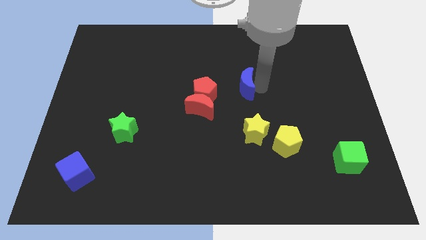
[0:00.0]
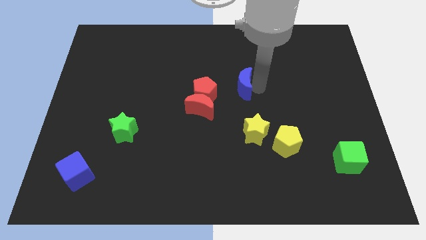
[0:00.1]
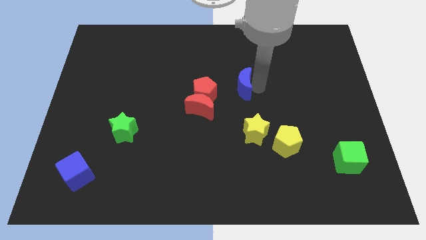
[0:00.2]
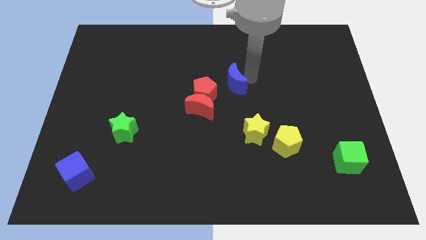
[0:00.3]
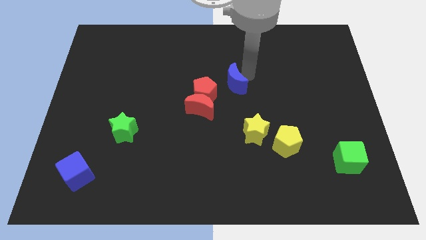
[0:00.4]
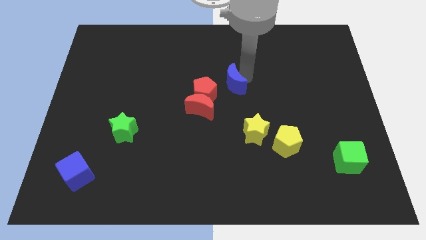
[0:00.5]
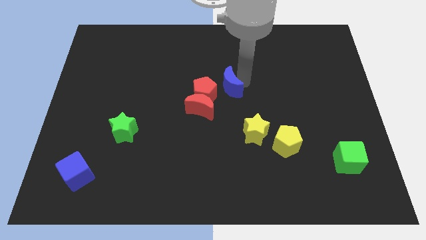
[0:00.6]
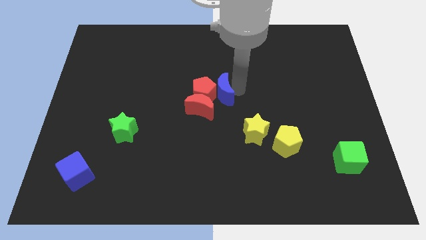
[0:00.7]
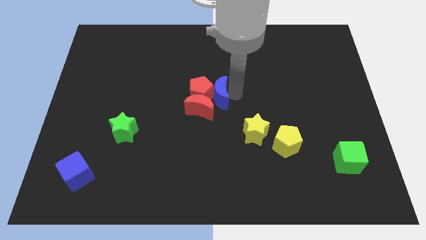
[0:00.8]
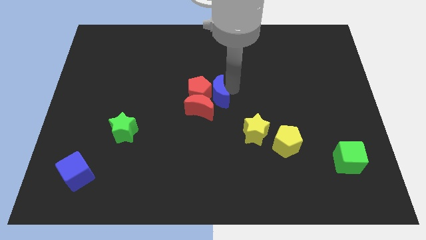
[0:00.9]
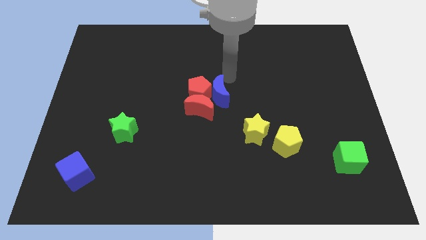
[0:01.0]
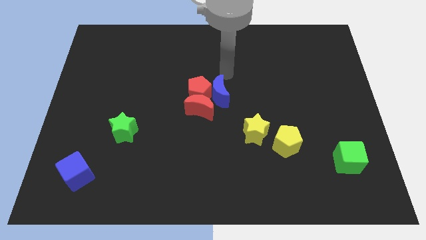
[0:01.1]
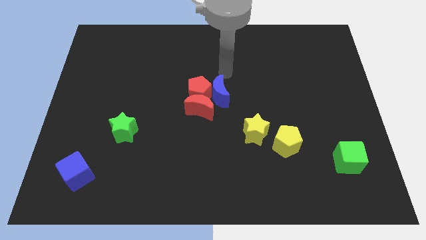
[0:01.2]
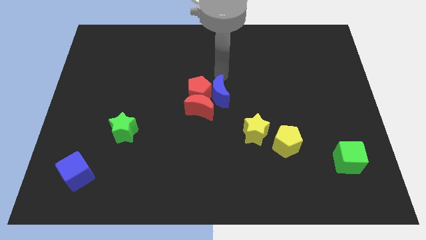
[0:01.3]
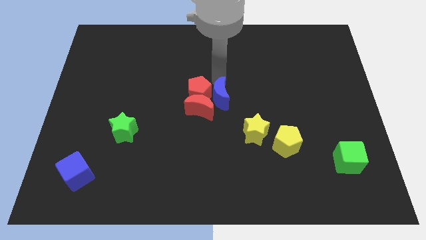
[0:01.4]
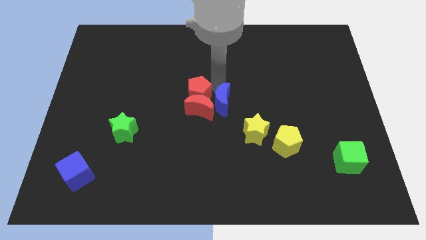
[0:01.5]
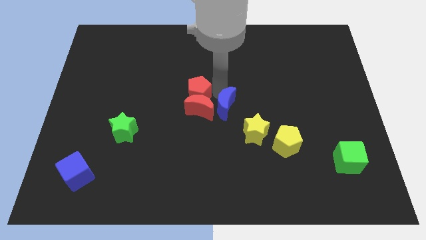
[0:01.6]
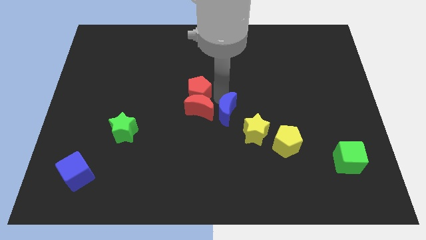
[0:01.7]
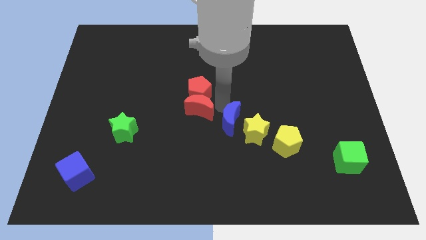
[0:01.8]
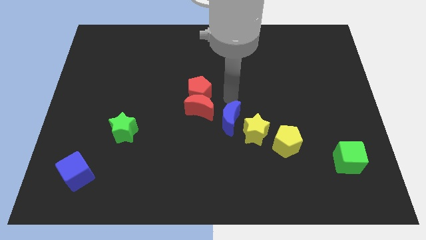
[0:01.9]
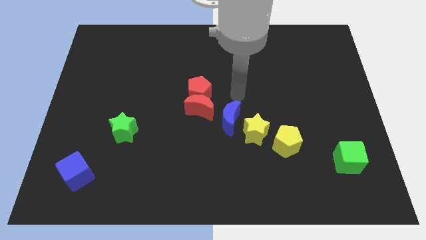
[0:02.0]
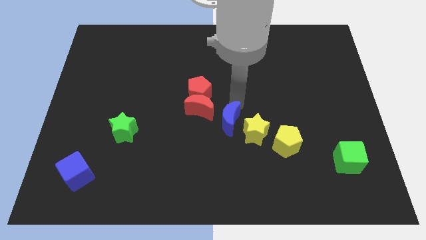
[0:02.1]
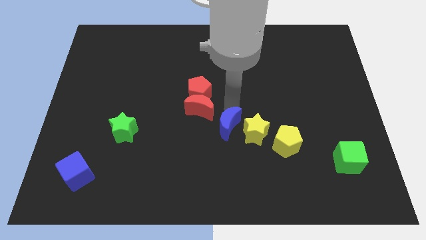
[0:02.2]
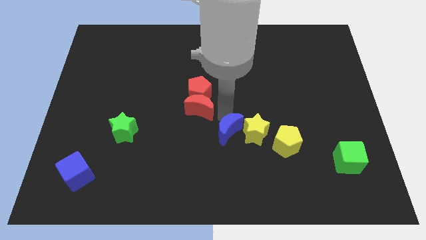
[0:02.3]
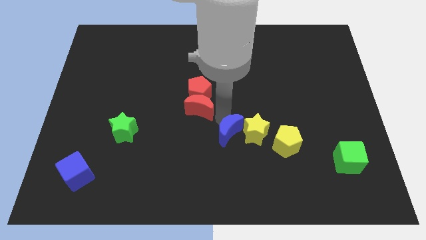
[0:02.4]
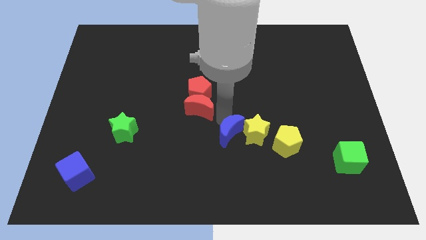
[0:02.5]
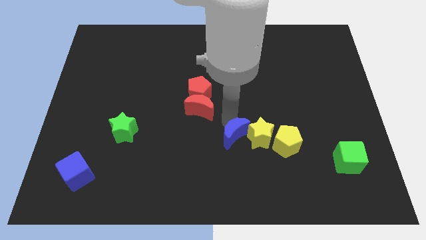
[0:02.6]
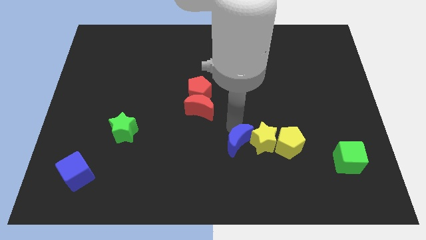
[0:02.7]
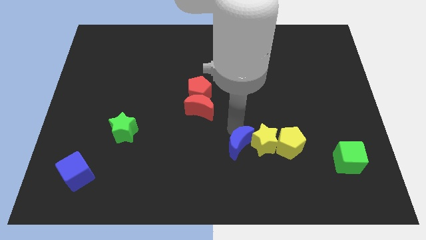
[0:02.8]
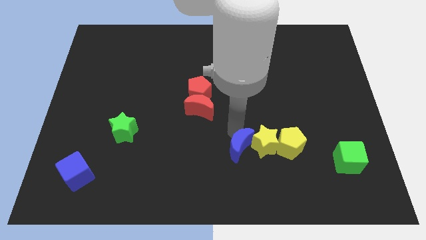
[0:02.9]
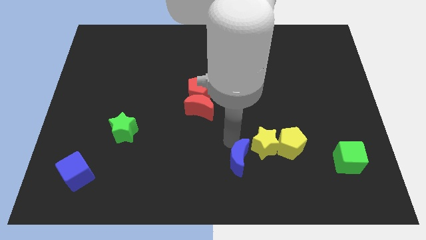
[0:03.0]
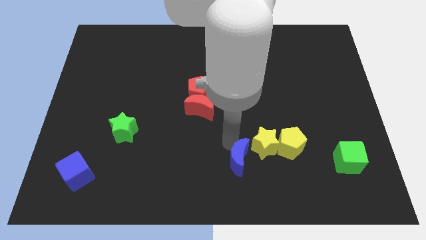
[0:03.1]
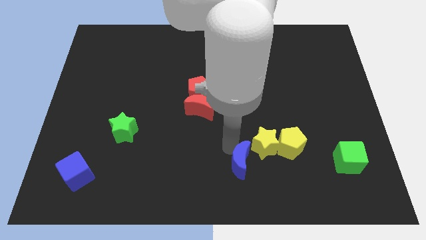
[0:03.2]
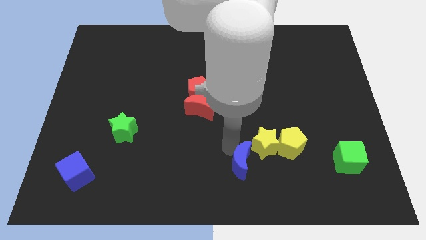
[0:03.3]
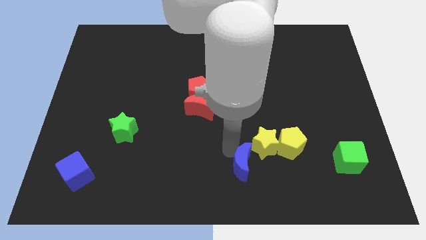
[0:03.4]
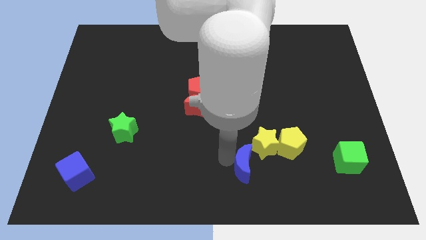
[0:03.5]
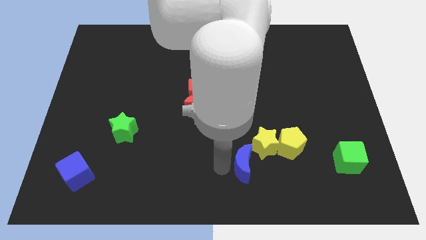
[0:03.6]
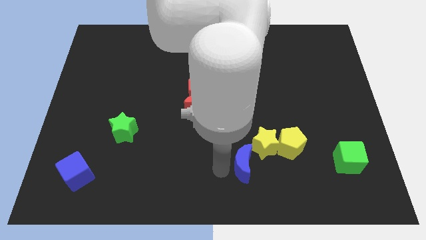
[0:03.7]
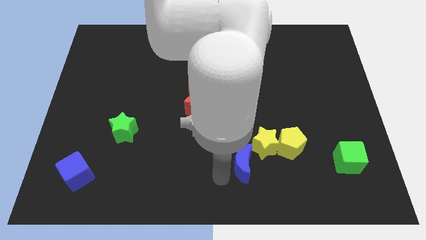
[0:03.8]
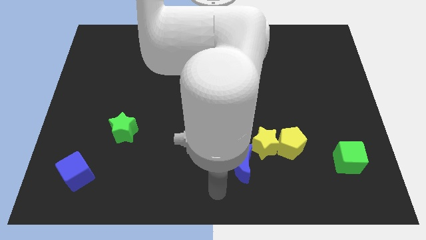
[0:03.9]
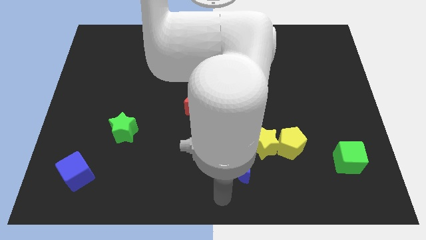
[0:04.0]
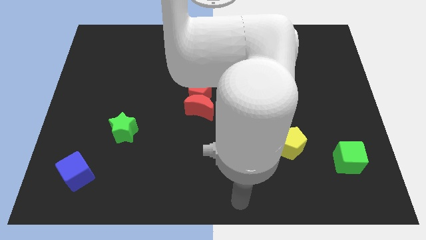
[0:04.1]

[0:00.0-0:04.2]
move the blue moon to the bottom left of the yellow star

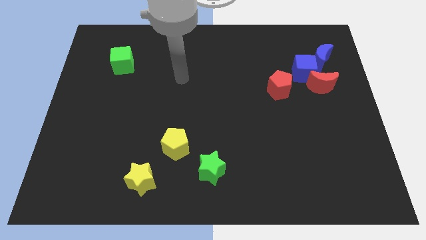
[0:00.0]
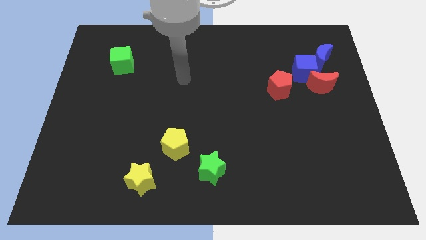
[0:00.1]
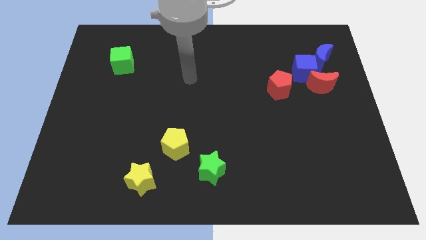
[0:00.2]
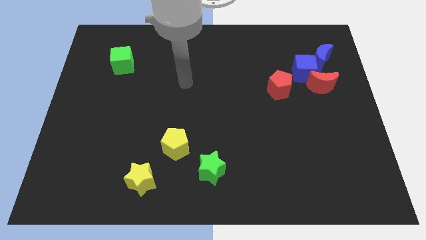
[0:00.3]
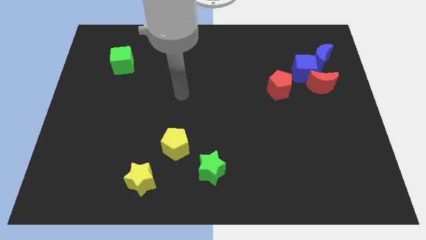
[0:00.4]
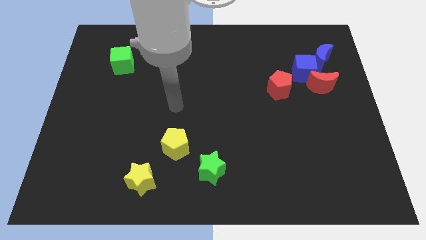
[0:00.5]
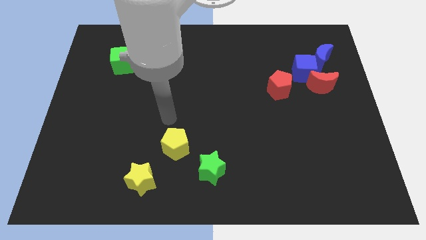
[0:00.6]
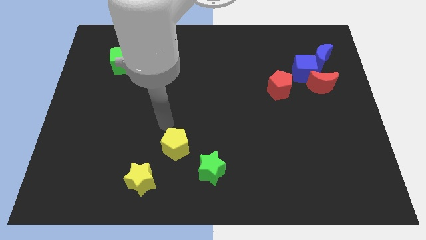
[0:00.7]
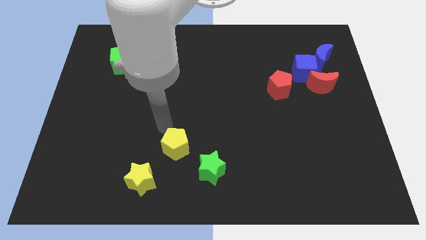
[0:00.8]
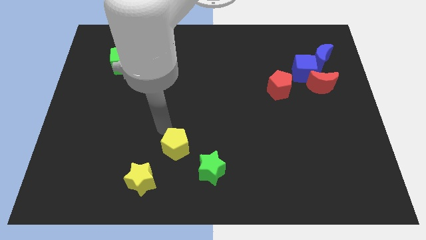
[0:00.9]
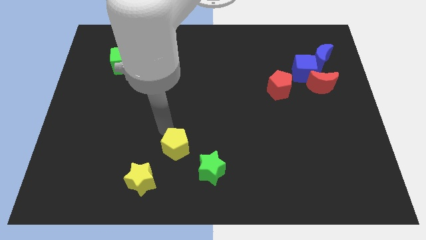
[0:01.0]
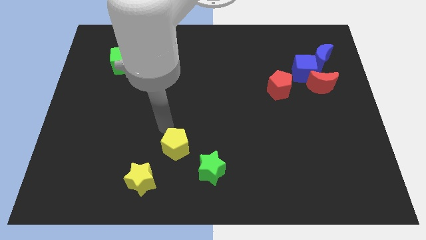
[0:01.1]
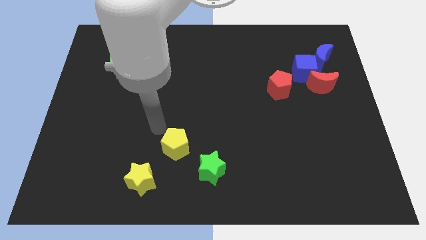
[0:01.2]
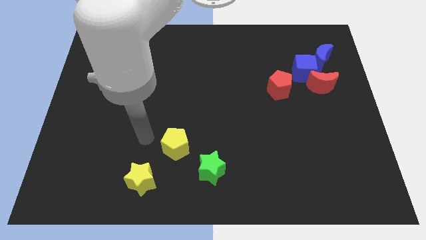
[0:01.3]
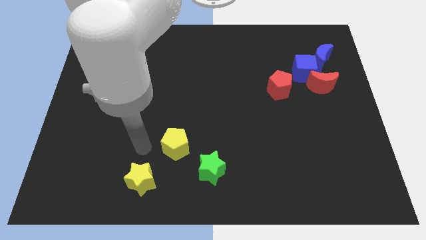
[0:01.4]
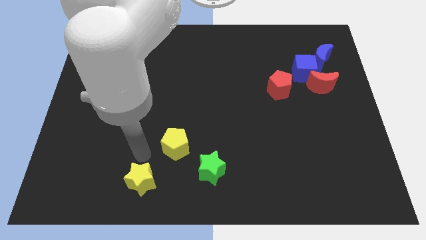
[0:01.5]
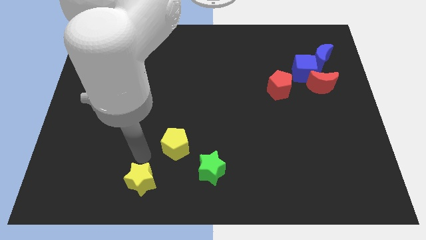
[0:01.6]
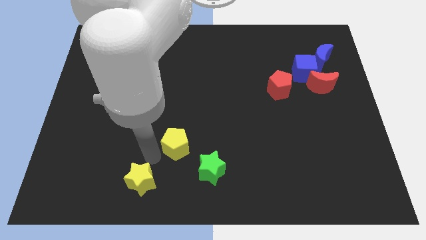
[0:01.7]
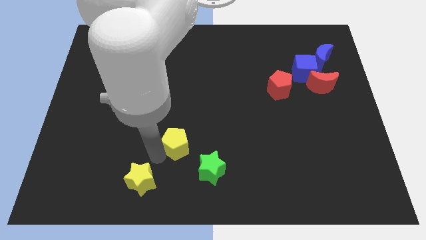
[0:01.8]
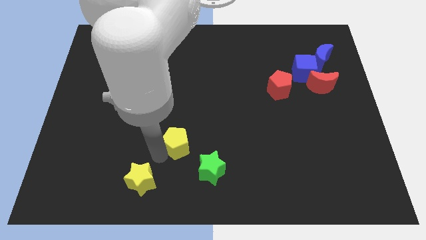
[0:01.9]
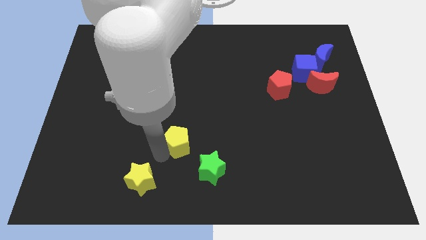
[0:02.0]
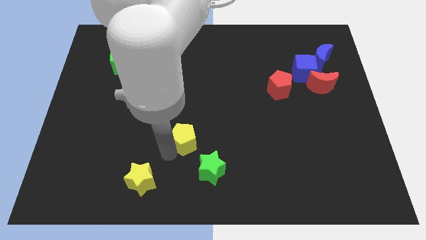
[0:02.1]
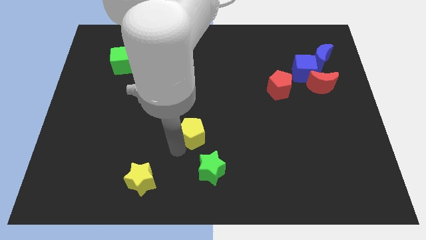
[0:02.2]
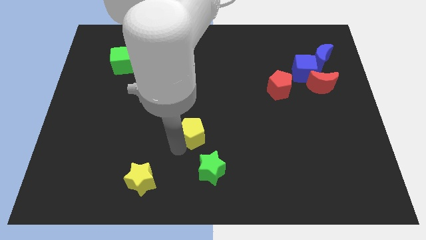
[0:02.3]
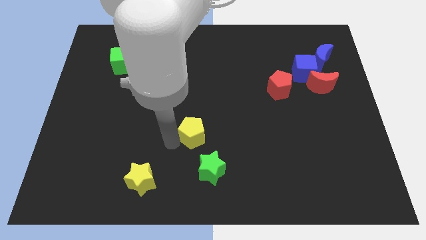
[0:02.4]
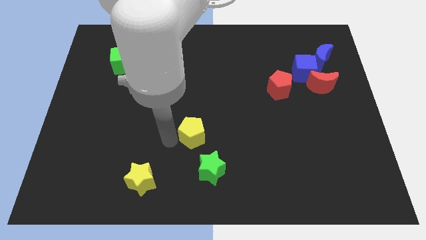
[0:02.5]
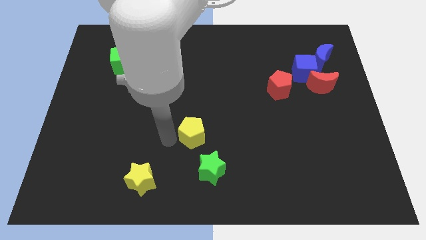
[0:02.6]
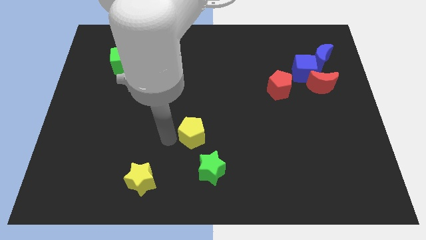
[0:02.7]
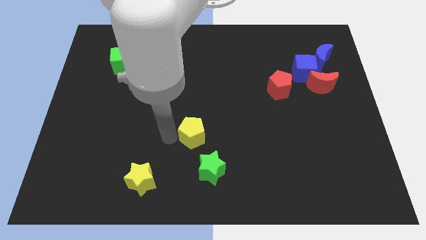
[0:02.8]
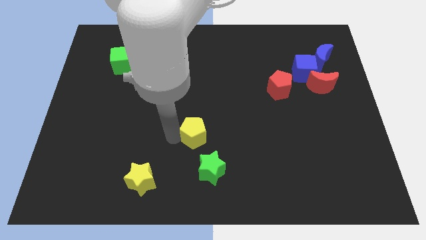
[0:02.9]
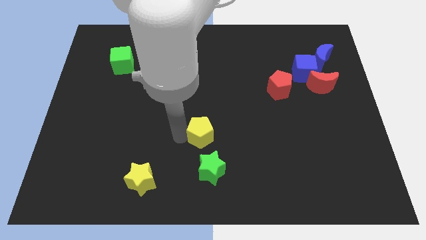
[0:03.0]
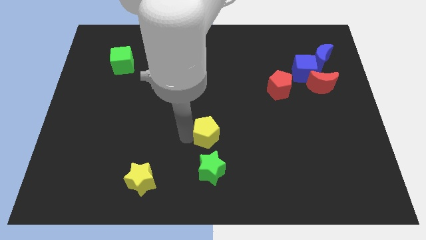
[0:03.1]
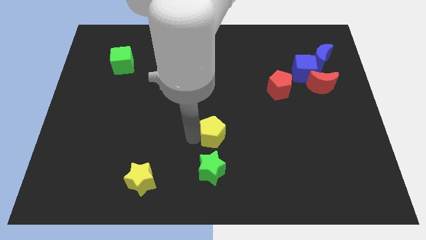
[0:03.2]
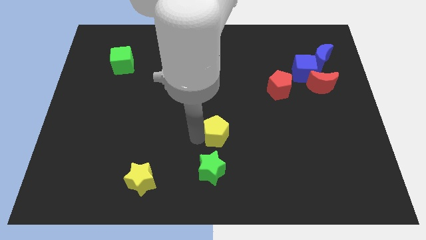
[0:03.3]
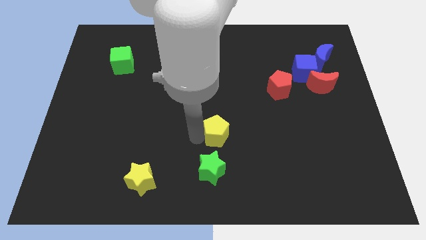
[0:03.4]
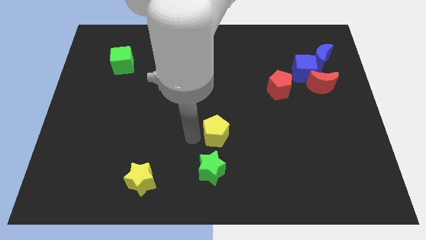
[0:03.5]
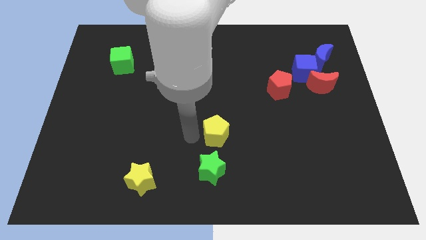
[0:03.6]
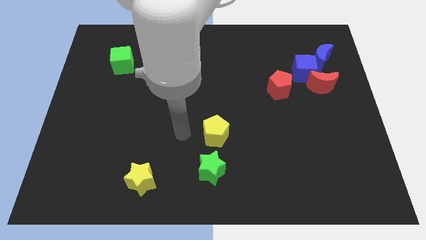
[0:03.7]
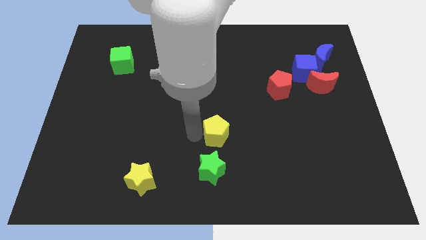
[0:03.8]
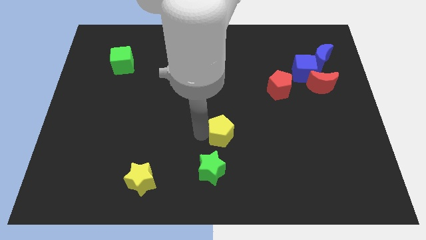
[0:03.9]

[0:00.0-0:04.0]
move the yellow pentagon vertically above the green star

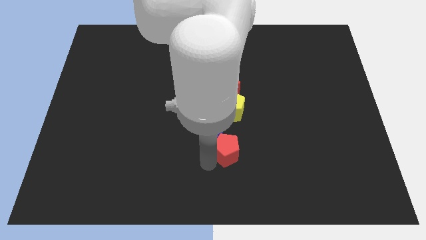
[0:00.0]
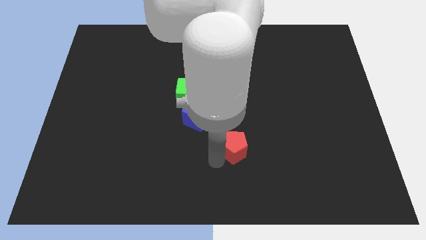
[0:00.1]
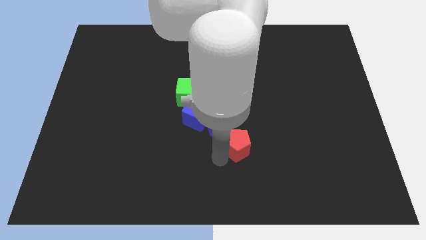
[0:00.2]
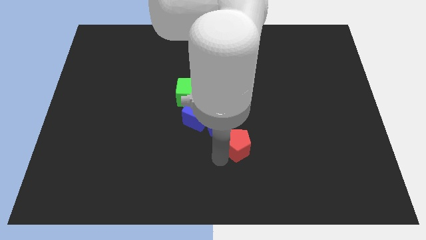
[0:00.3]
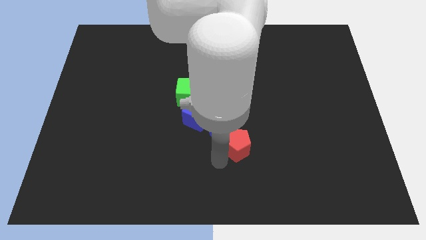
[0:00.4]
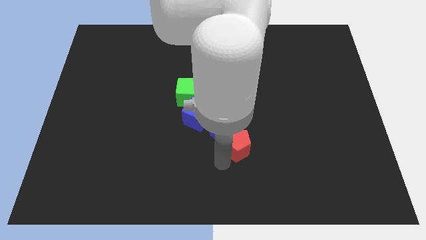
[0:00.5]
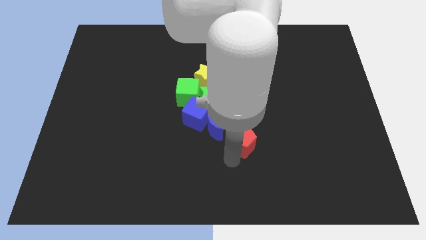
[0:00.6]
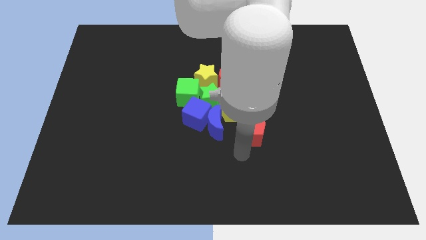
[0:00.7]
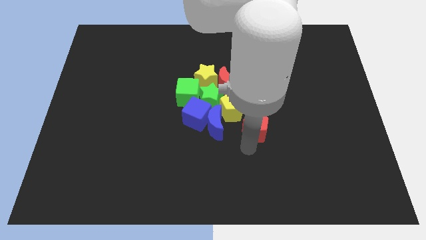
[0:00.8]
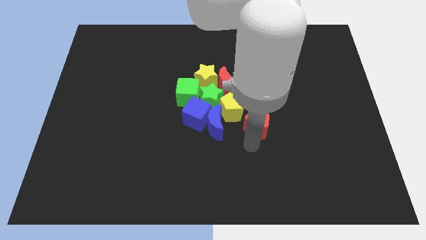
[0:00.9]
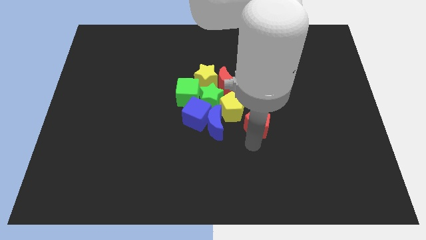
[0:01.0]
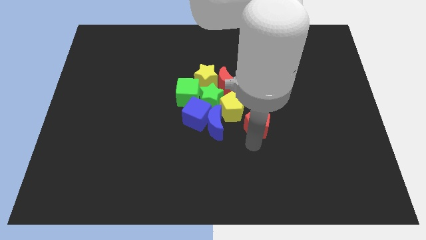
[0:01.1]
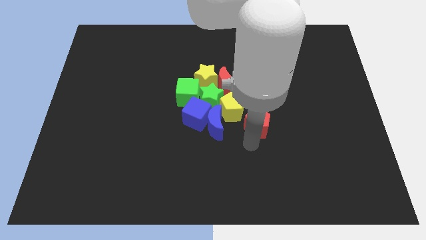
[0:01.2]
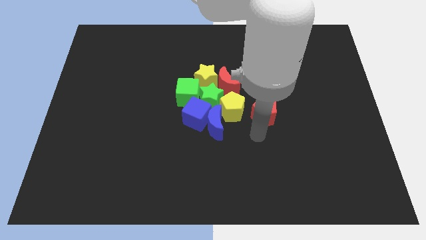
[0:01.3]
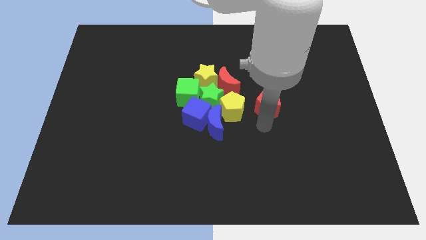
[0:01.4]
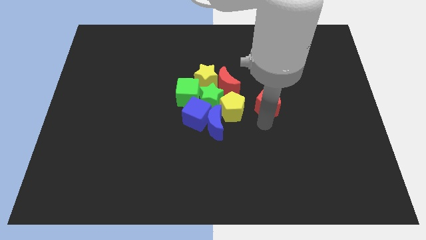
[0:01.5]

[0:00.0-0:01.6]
place the red pentagon right to the yellow pentagon
